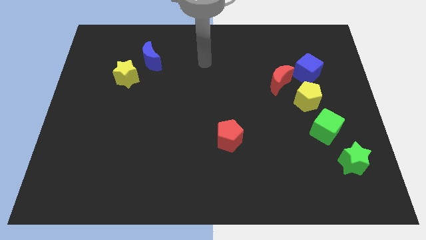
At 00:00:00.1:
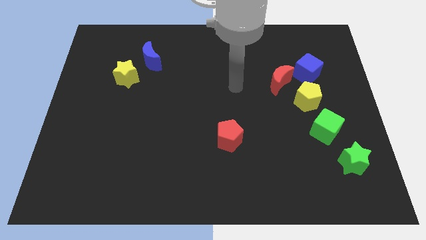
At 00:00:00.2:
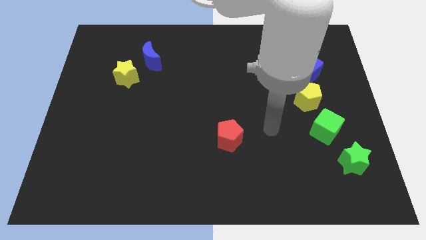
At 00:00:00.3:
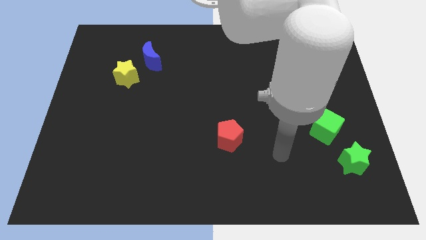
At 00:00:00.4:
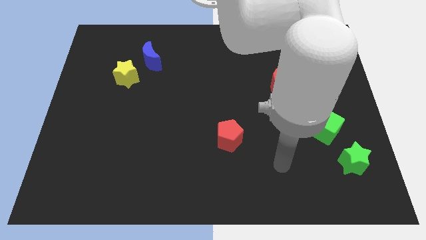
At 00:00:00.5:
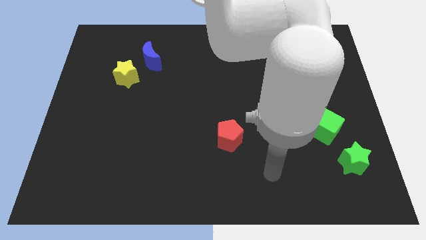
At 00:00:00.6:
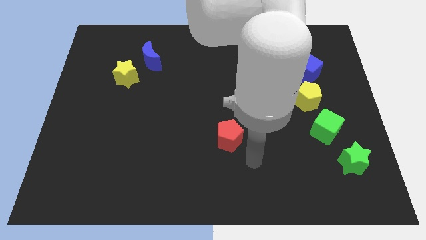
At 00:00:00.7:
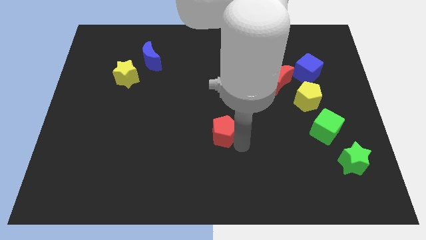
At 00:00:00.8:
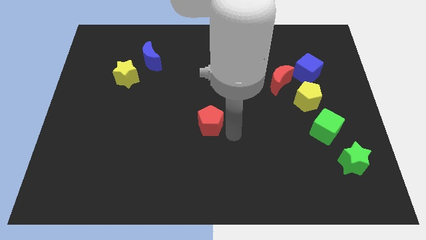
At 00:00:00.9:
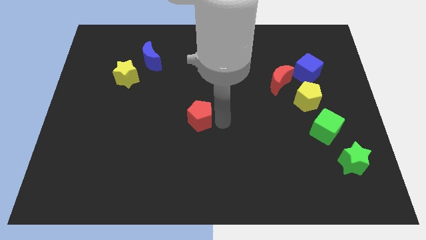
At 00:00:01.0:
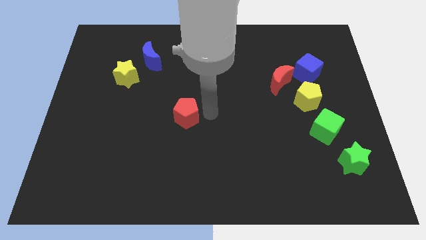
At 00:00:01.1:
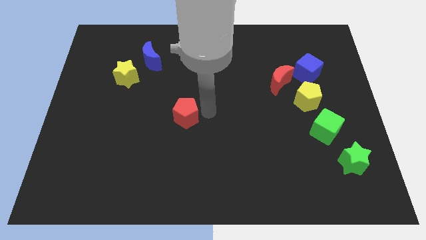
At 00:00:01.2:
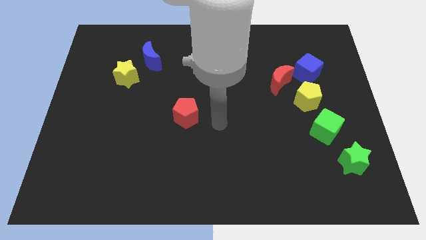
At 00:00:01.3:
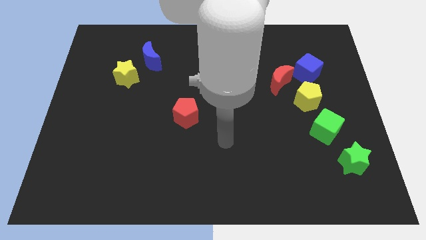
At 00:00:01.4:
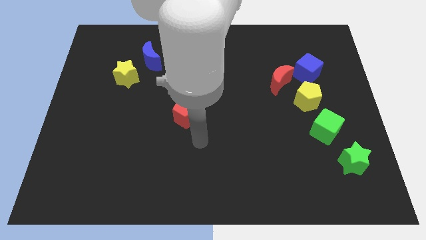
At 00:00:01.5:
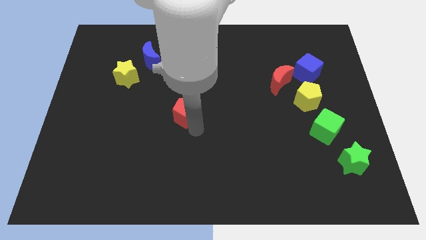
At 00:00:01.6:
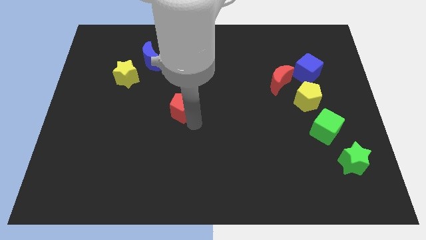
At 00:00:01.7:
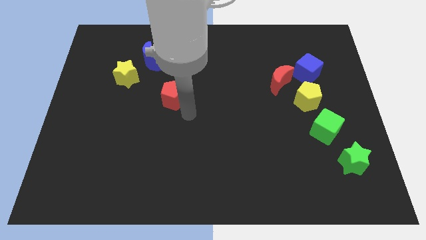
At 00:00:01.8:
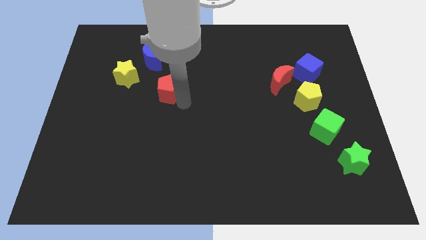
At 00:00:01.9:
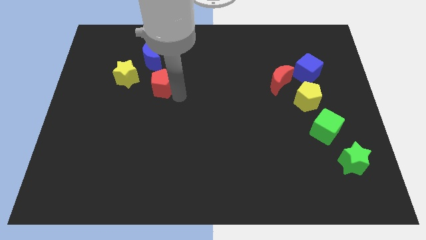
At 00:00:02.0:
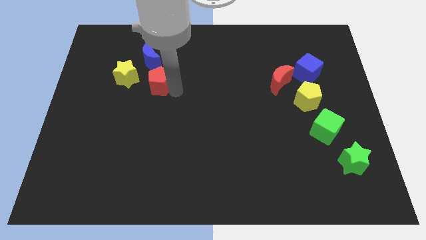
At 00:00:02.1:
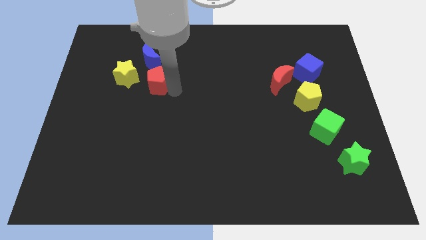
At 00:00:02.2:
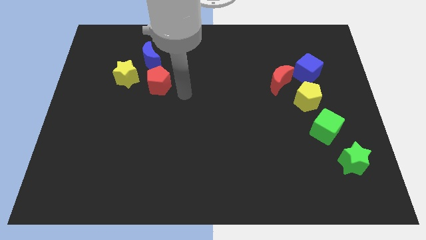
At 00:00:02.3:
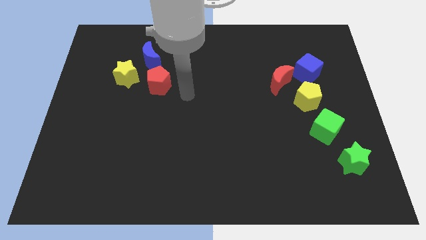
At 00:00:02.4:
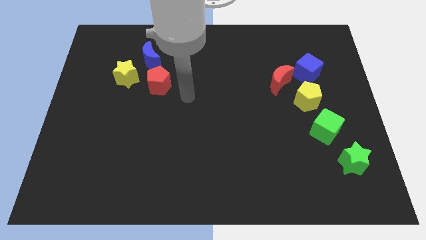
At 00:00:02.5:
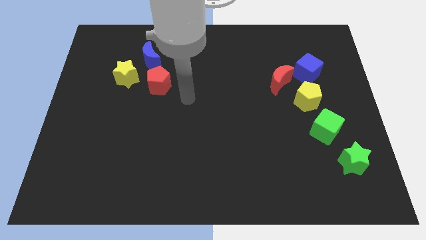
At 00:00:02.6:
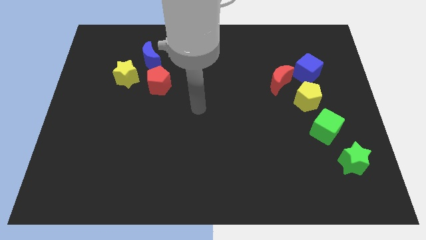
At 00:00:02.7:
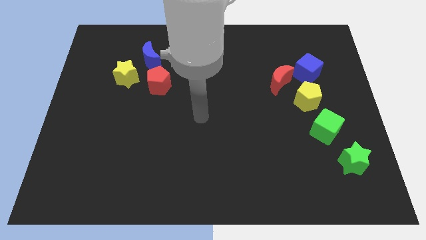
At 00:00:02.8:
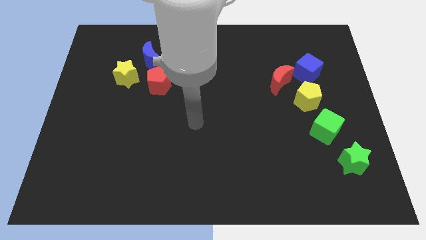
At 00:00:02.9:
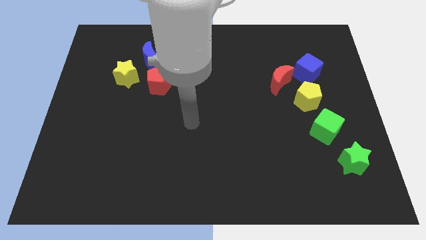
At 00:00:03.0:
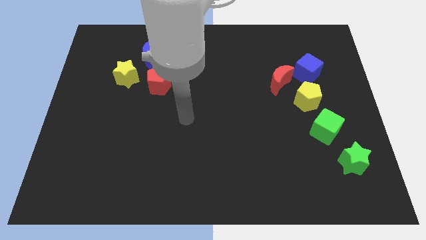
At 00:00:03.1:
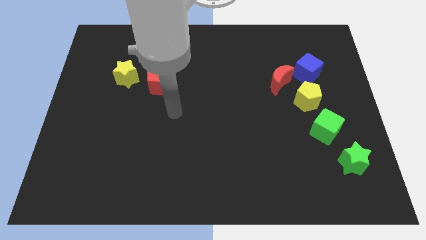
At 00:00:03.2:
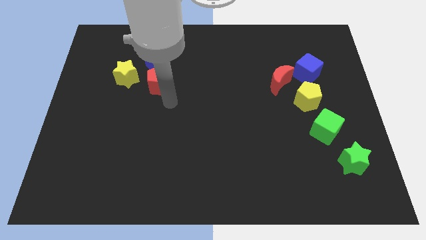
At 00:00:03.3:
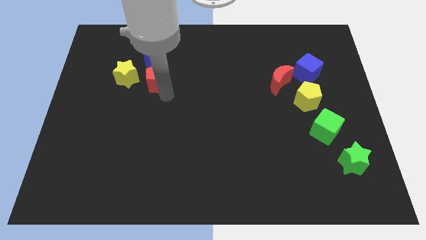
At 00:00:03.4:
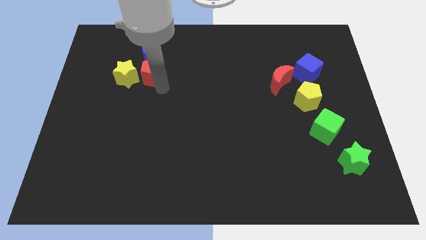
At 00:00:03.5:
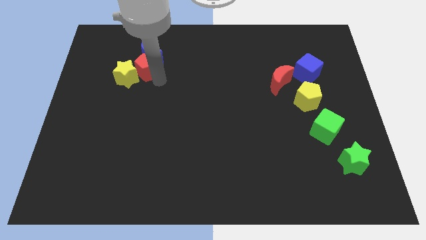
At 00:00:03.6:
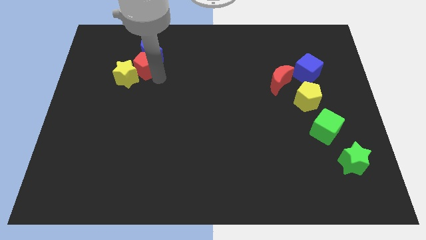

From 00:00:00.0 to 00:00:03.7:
put the red pentagon next to the blue moon

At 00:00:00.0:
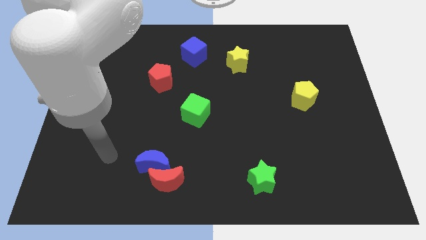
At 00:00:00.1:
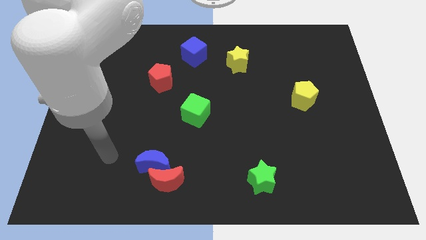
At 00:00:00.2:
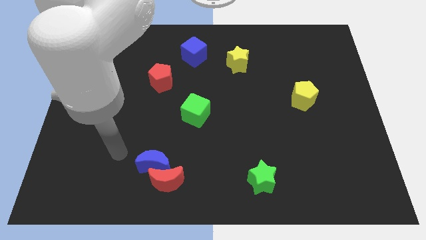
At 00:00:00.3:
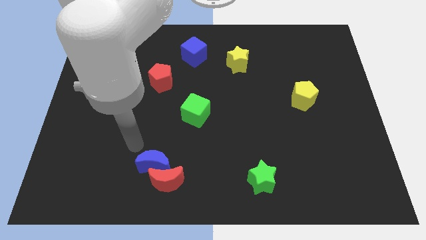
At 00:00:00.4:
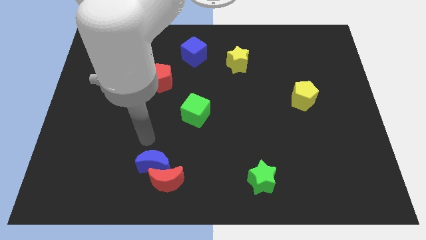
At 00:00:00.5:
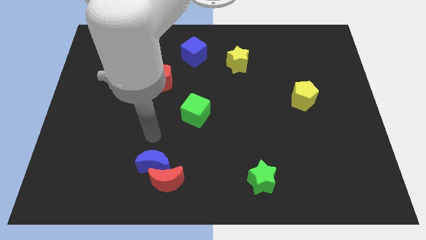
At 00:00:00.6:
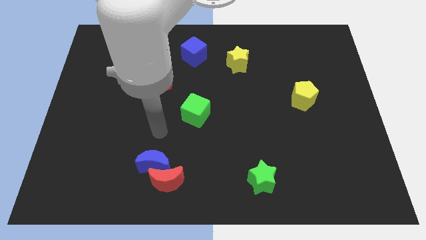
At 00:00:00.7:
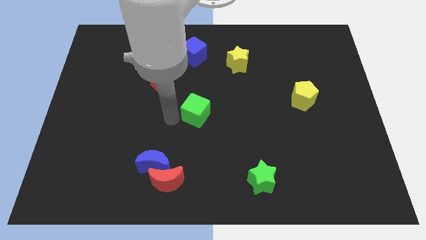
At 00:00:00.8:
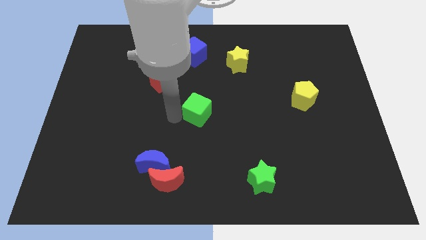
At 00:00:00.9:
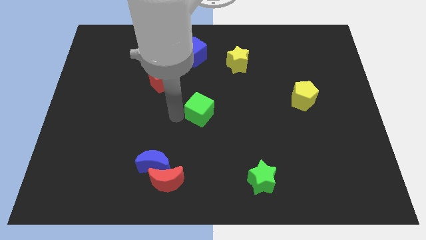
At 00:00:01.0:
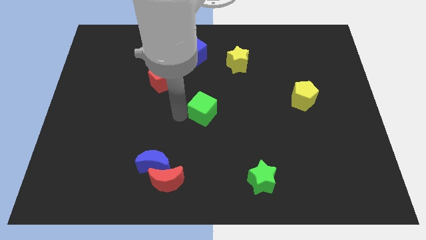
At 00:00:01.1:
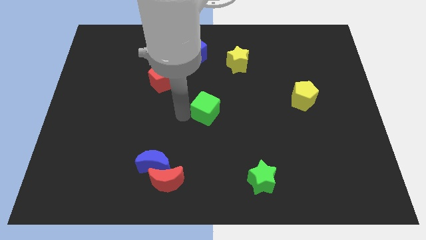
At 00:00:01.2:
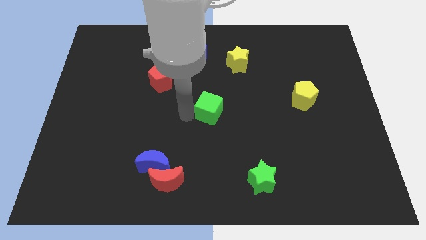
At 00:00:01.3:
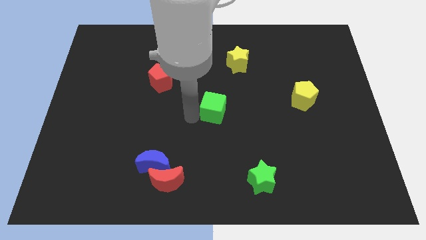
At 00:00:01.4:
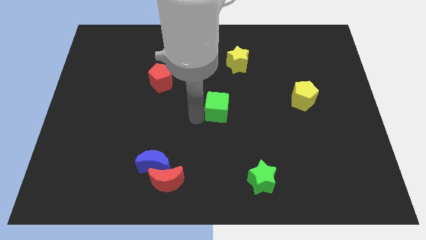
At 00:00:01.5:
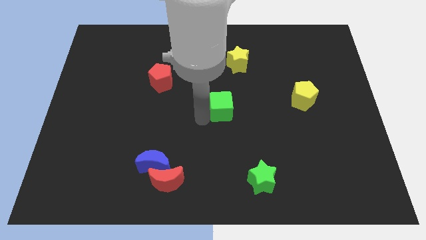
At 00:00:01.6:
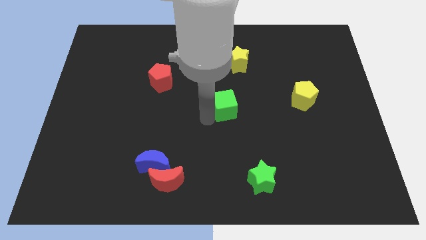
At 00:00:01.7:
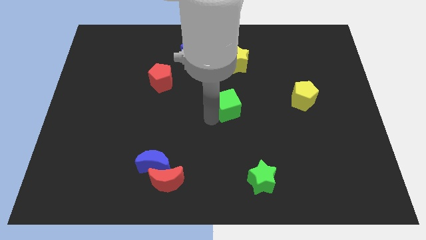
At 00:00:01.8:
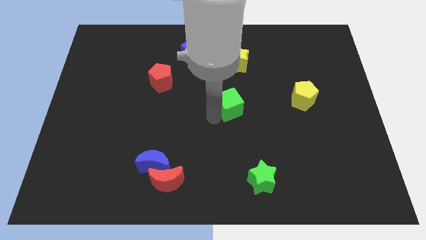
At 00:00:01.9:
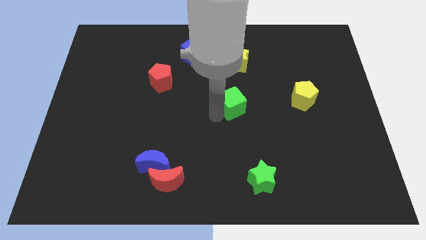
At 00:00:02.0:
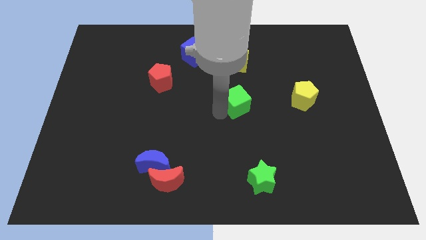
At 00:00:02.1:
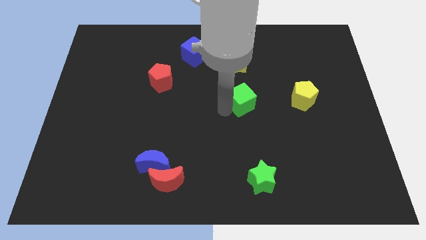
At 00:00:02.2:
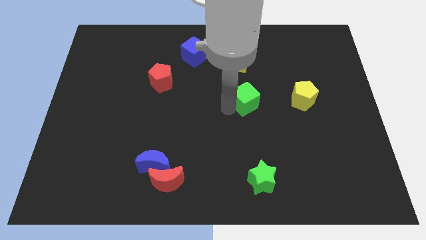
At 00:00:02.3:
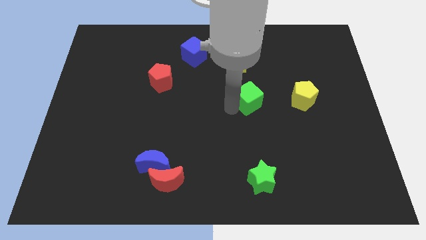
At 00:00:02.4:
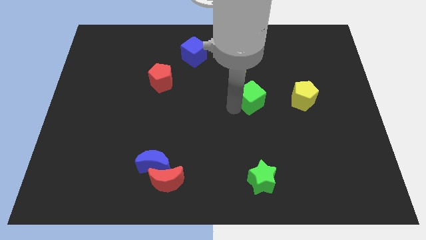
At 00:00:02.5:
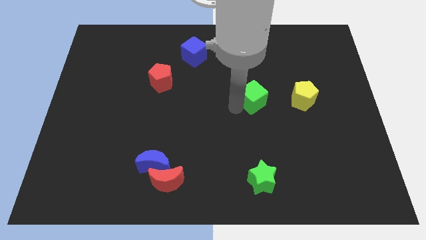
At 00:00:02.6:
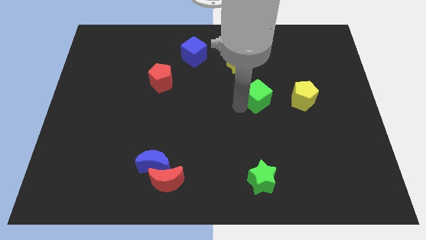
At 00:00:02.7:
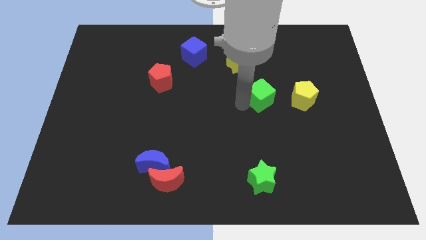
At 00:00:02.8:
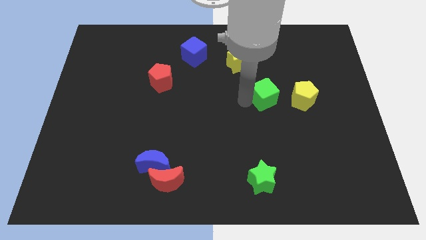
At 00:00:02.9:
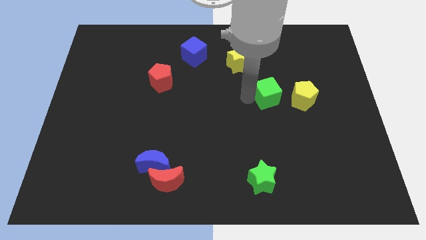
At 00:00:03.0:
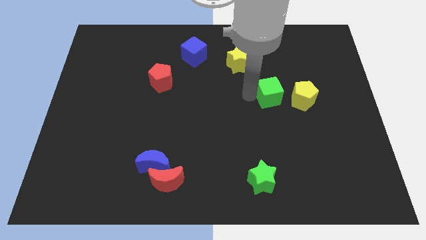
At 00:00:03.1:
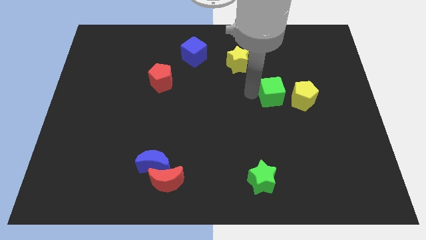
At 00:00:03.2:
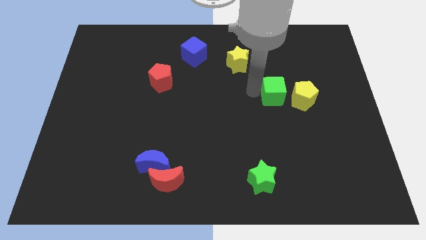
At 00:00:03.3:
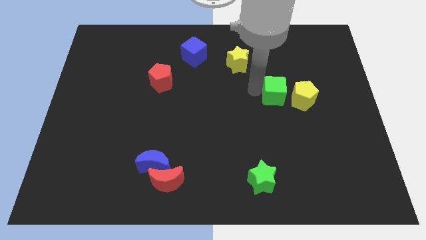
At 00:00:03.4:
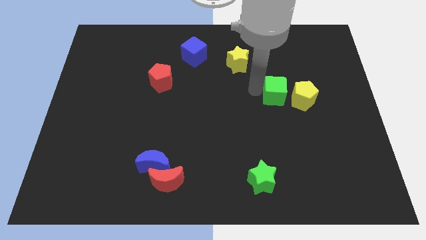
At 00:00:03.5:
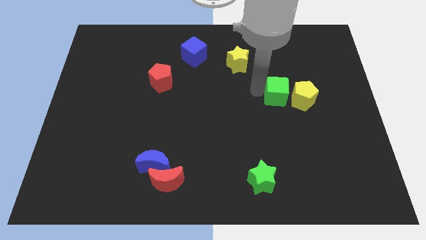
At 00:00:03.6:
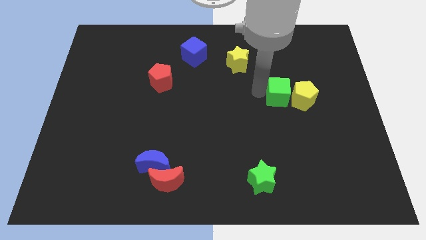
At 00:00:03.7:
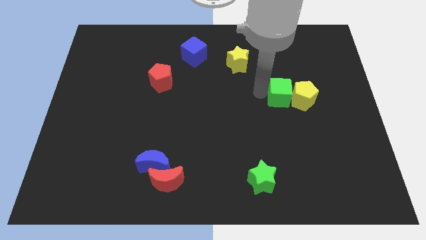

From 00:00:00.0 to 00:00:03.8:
put the green cube close to the yellow pentagon

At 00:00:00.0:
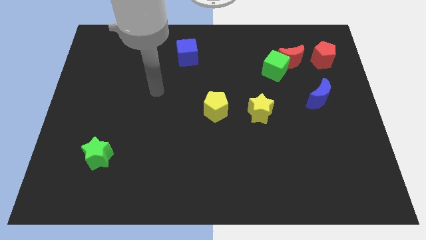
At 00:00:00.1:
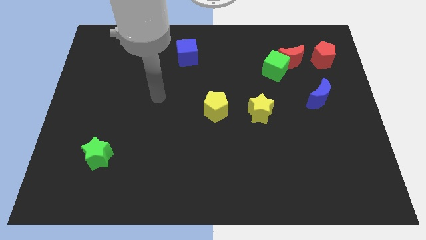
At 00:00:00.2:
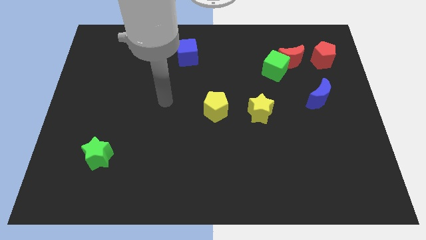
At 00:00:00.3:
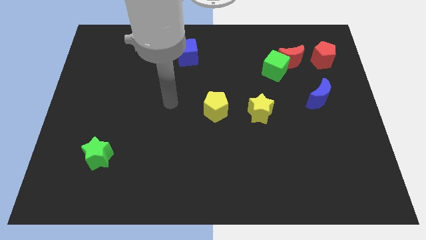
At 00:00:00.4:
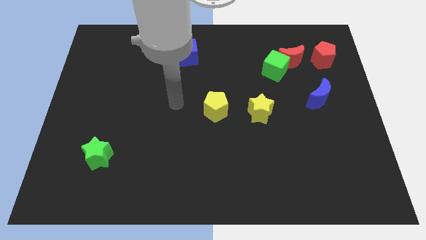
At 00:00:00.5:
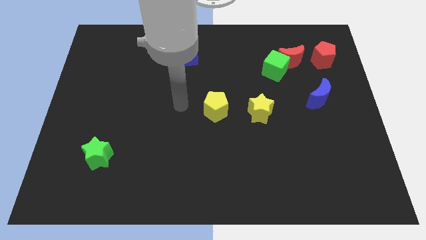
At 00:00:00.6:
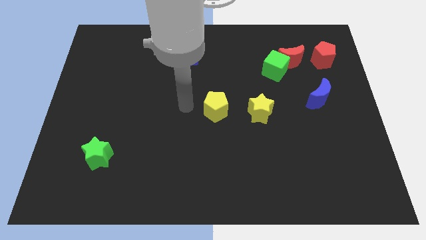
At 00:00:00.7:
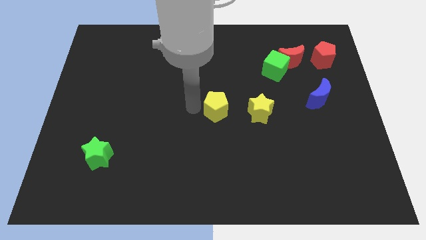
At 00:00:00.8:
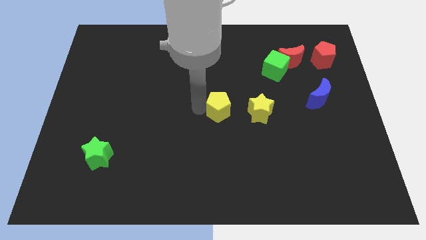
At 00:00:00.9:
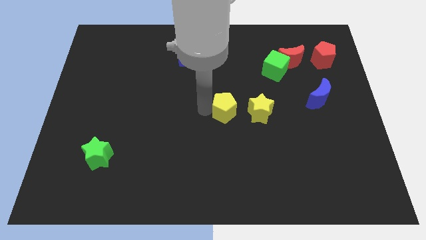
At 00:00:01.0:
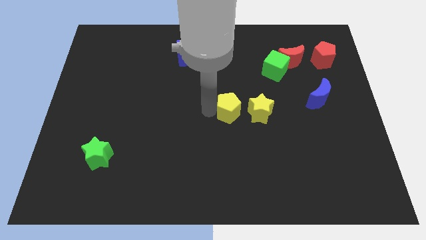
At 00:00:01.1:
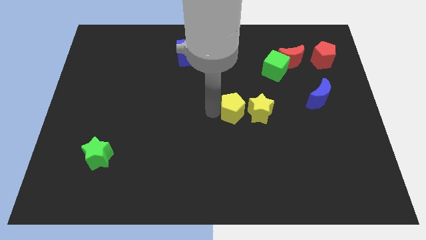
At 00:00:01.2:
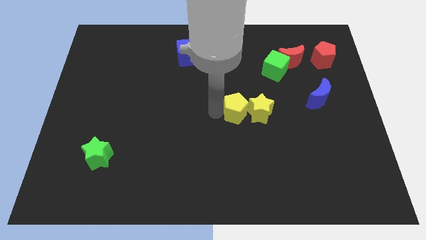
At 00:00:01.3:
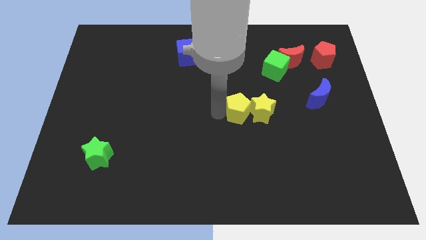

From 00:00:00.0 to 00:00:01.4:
move the yellow pentagon close to the yellow star
